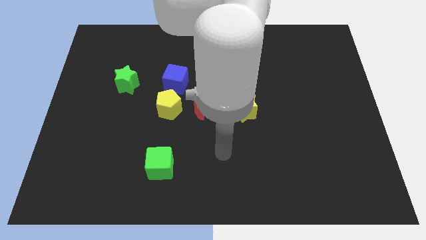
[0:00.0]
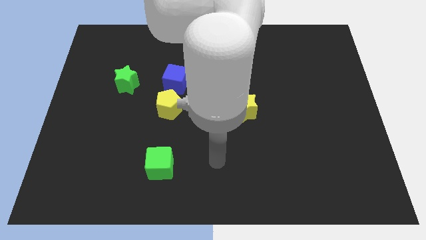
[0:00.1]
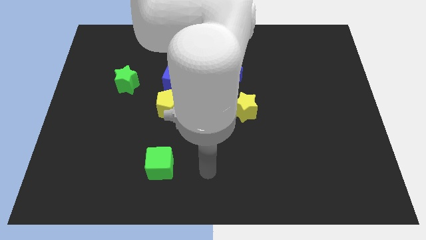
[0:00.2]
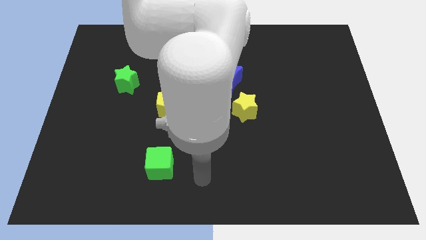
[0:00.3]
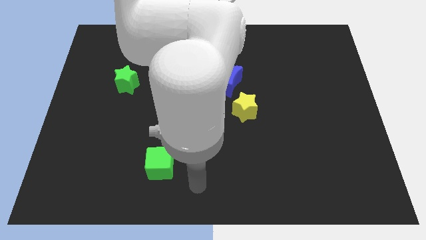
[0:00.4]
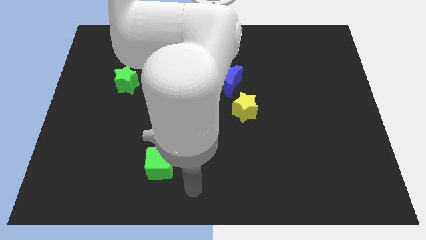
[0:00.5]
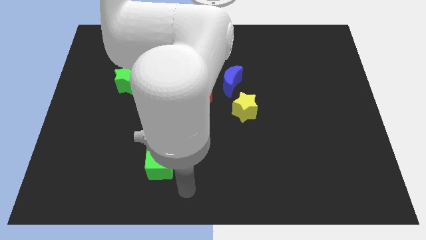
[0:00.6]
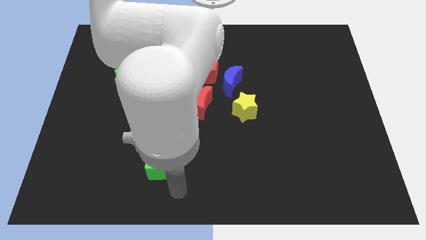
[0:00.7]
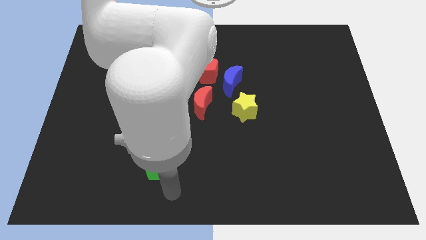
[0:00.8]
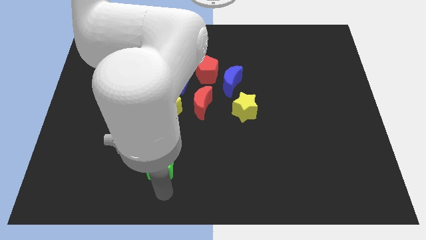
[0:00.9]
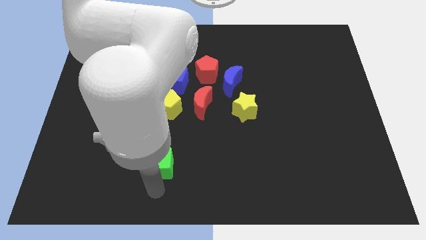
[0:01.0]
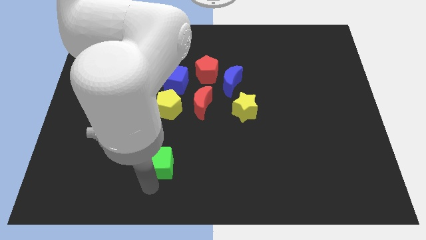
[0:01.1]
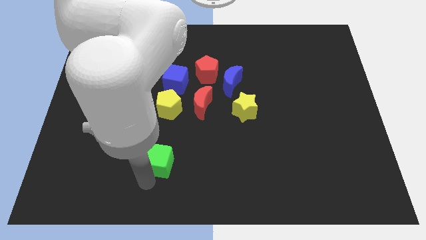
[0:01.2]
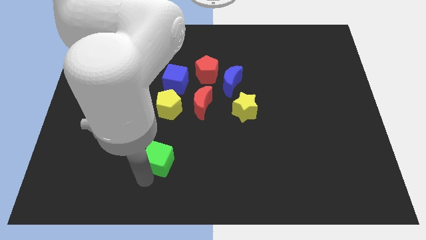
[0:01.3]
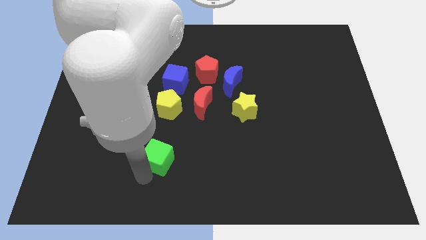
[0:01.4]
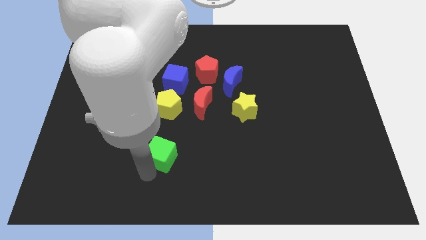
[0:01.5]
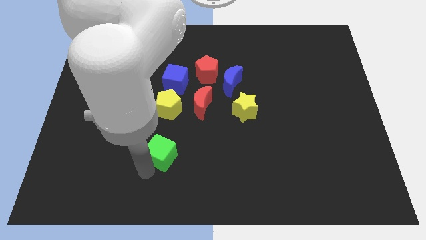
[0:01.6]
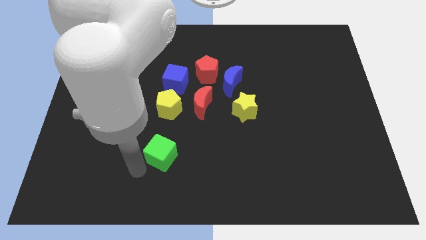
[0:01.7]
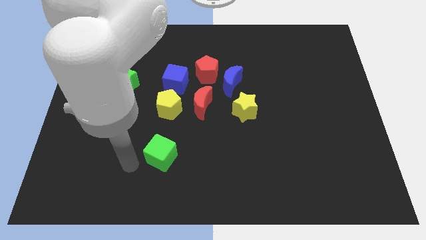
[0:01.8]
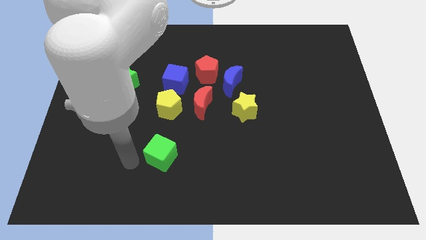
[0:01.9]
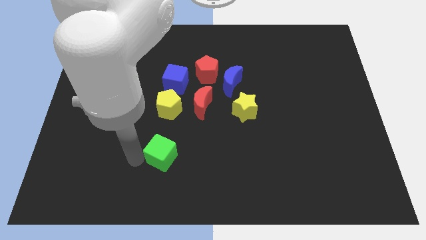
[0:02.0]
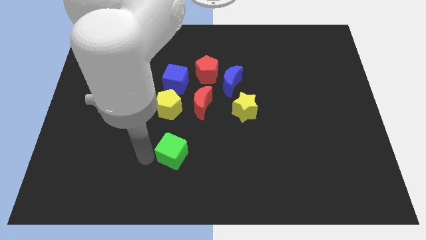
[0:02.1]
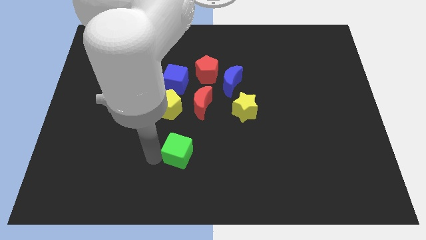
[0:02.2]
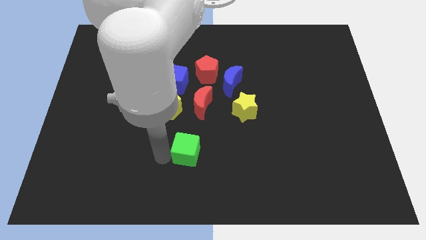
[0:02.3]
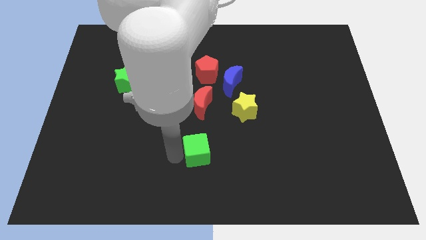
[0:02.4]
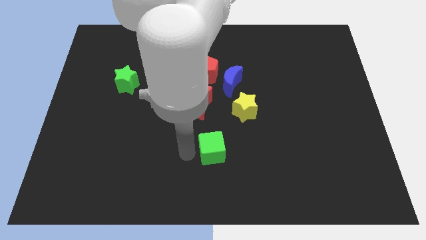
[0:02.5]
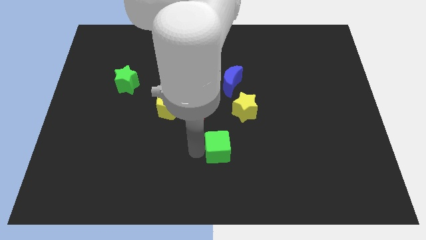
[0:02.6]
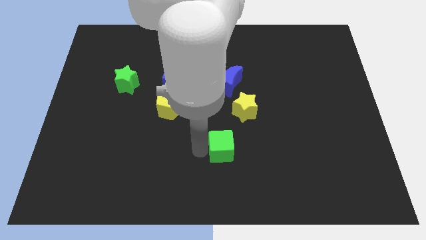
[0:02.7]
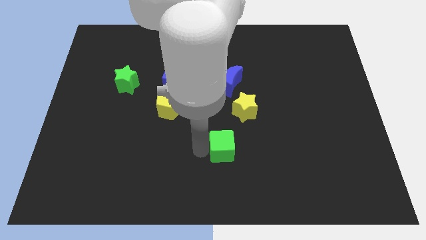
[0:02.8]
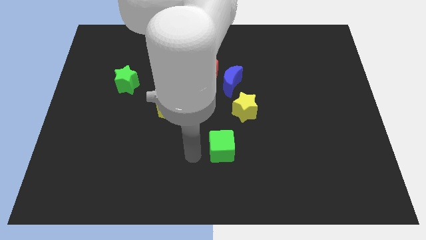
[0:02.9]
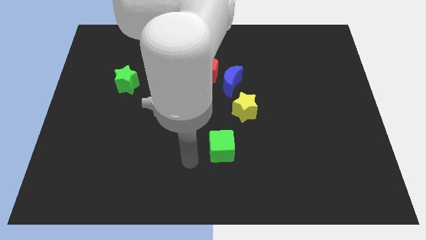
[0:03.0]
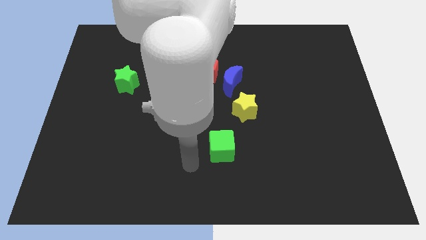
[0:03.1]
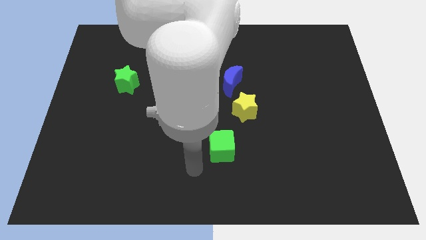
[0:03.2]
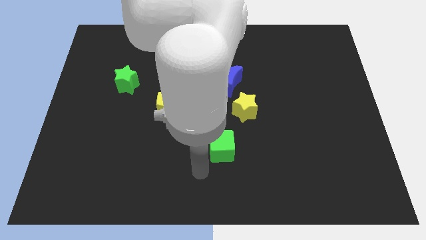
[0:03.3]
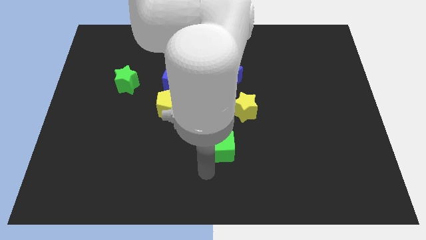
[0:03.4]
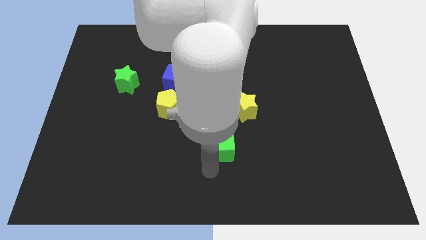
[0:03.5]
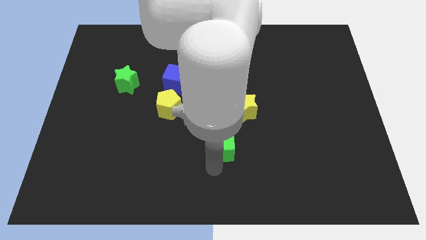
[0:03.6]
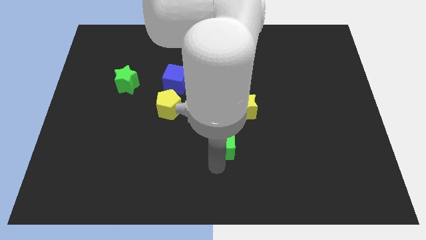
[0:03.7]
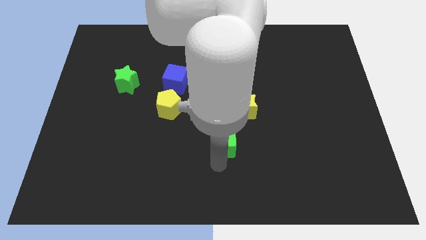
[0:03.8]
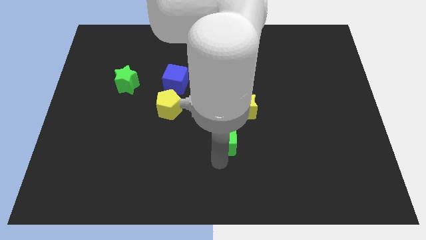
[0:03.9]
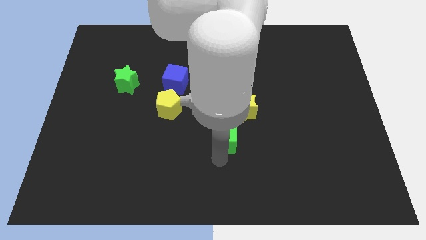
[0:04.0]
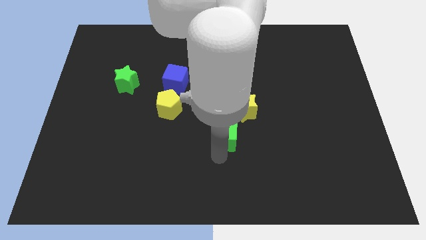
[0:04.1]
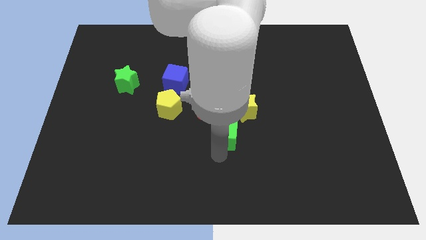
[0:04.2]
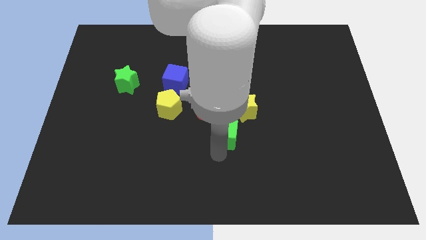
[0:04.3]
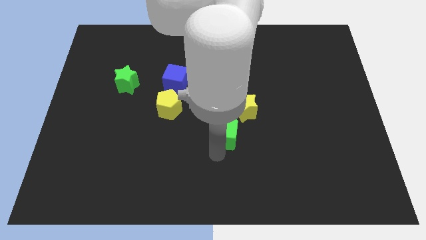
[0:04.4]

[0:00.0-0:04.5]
push the green cube towards the yellow star

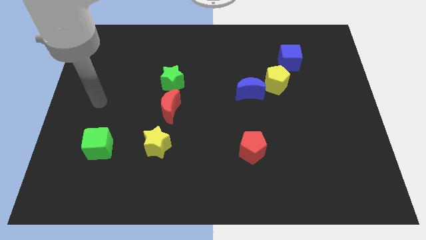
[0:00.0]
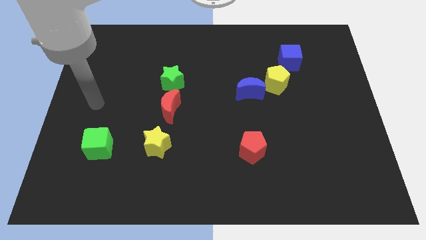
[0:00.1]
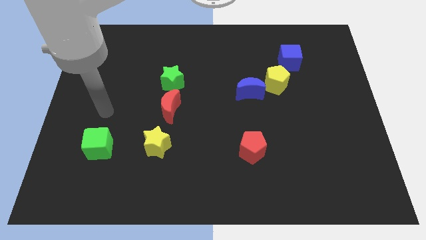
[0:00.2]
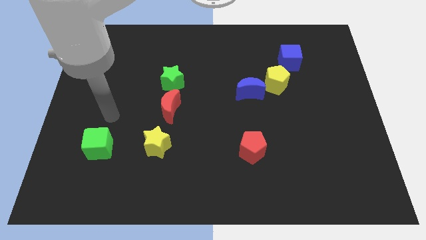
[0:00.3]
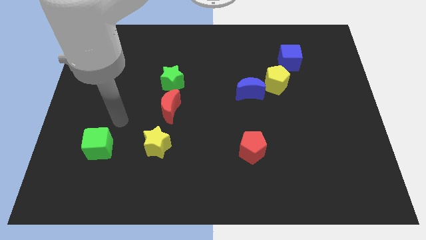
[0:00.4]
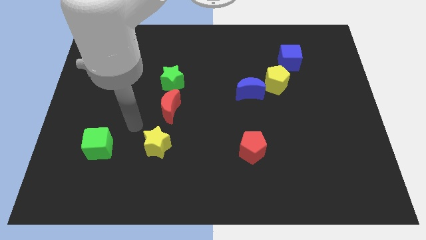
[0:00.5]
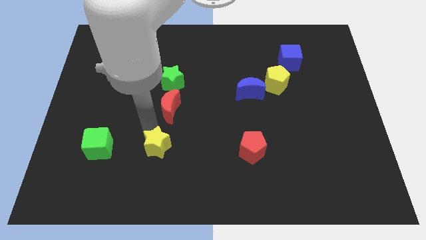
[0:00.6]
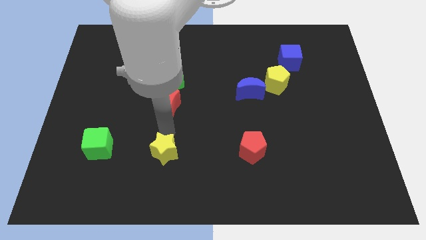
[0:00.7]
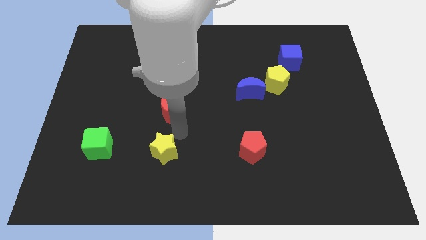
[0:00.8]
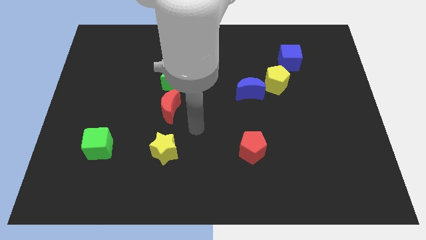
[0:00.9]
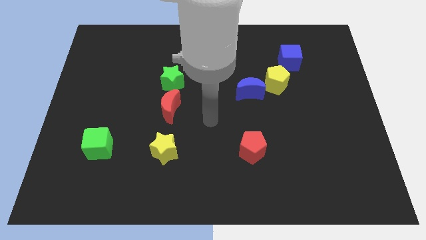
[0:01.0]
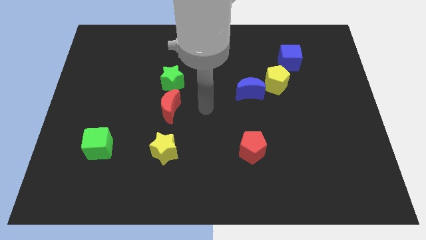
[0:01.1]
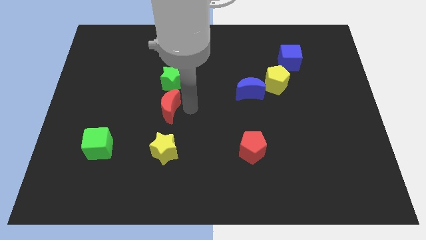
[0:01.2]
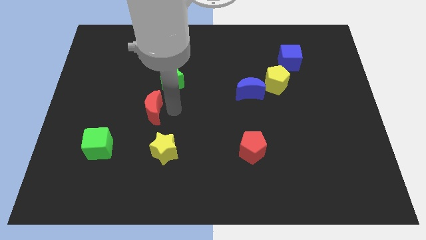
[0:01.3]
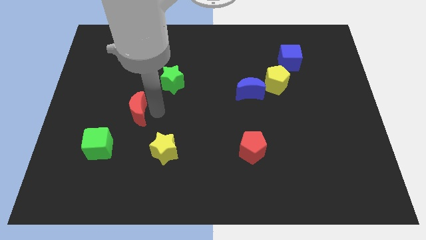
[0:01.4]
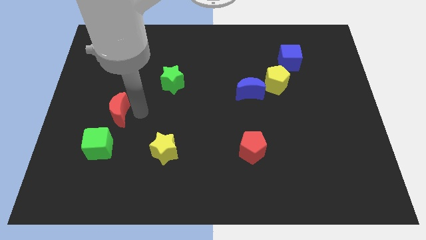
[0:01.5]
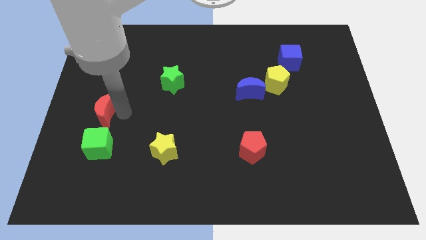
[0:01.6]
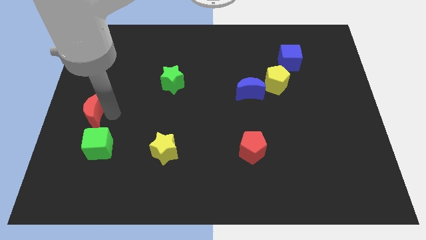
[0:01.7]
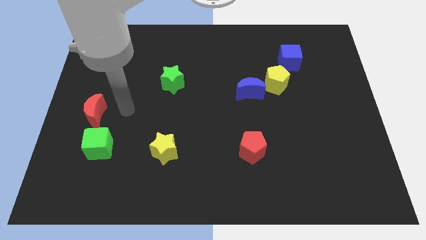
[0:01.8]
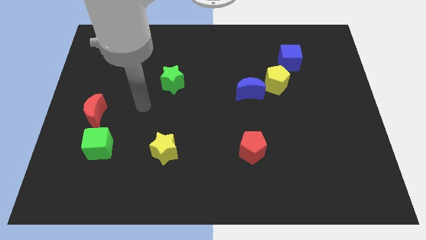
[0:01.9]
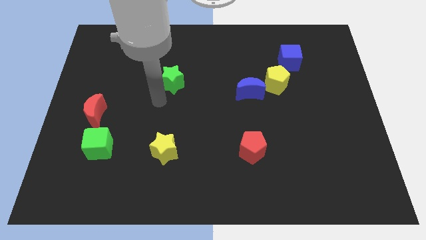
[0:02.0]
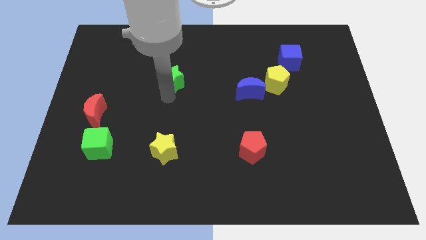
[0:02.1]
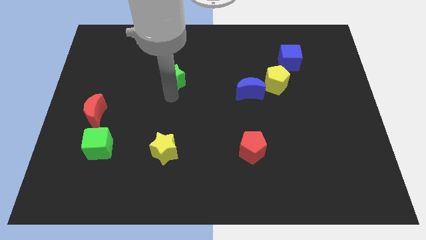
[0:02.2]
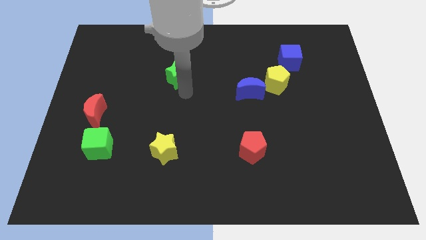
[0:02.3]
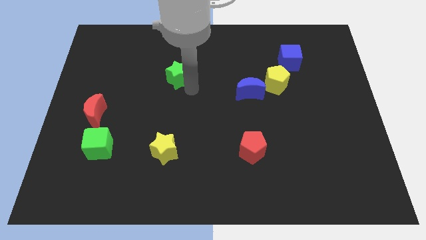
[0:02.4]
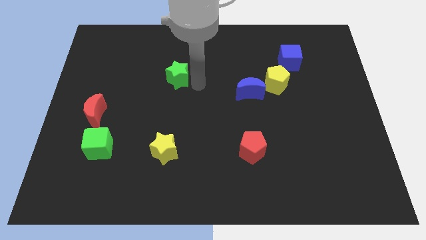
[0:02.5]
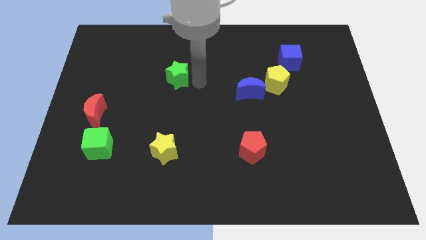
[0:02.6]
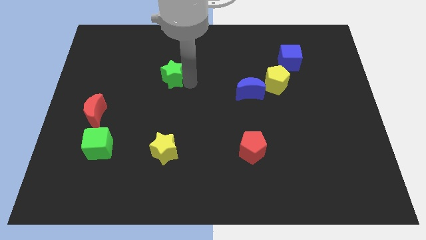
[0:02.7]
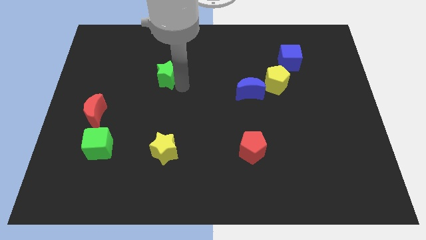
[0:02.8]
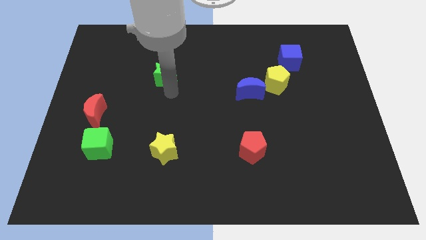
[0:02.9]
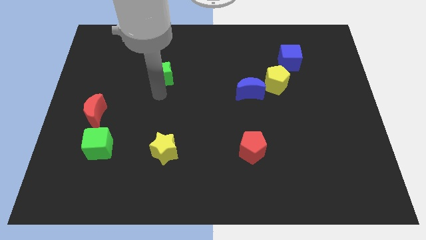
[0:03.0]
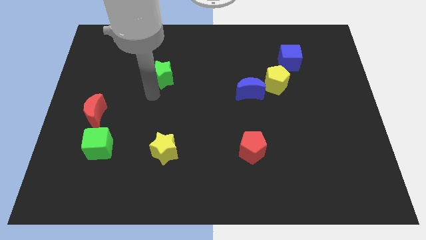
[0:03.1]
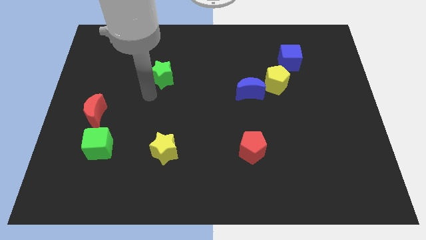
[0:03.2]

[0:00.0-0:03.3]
place the red moon above the green cube

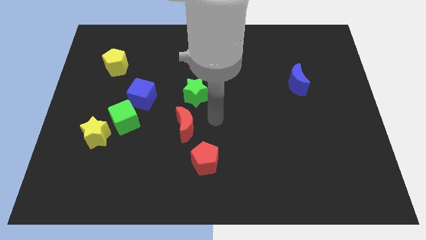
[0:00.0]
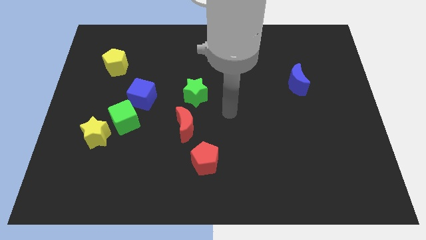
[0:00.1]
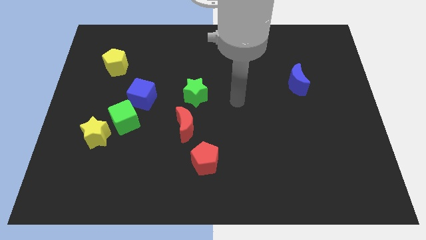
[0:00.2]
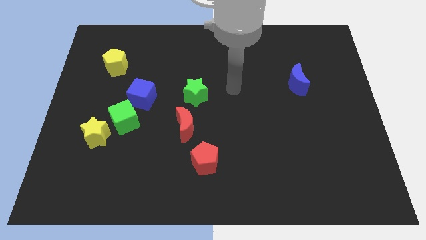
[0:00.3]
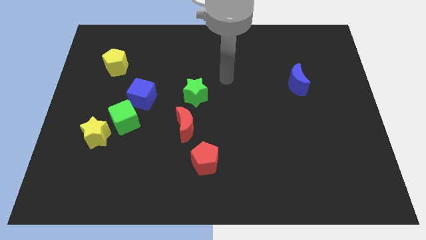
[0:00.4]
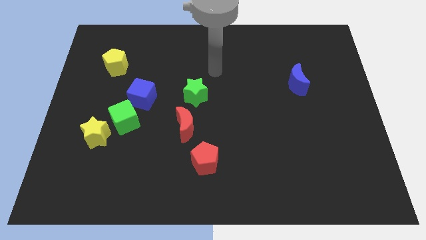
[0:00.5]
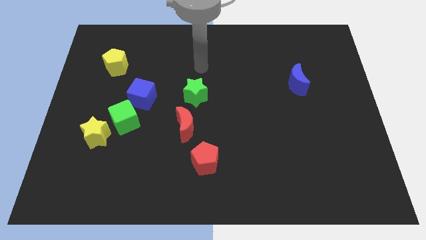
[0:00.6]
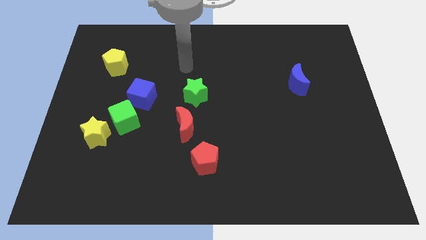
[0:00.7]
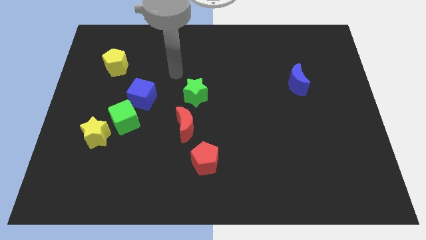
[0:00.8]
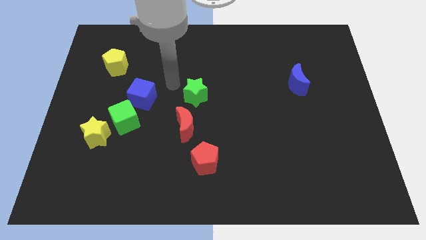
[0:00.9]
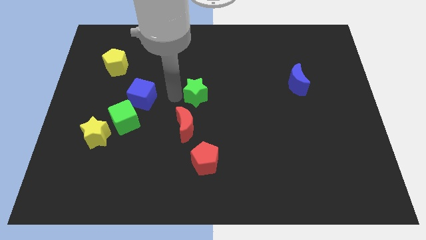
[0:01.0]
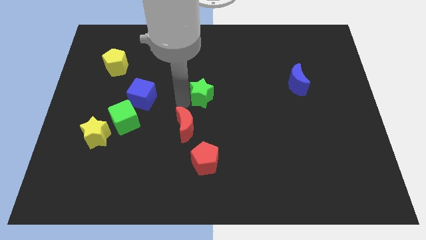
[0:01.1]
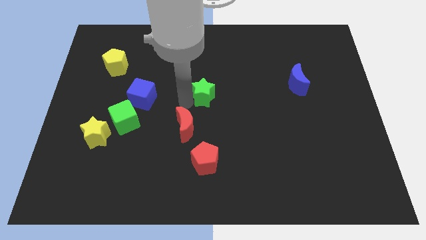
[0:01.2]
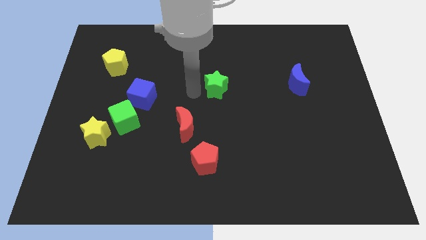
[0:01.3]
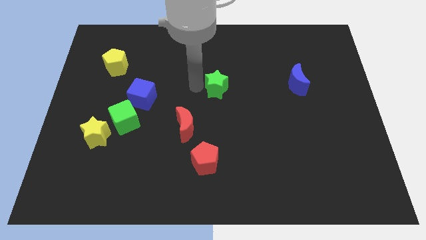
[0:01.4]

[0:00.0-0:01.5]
slide the green star slightly to the right side
